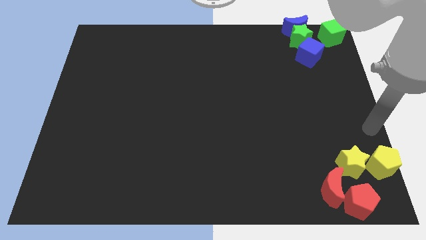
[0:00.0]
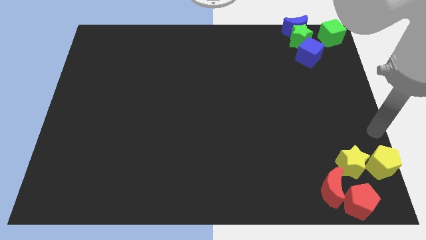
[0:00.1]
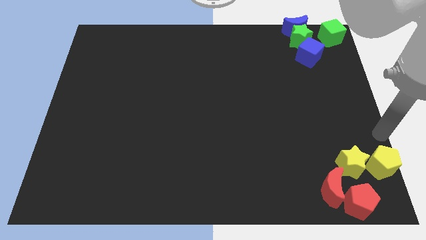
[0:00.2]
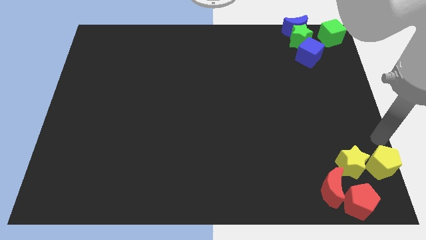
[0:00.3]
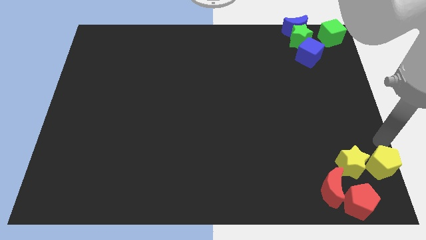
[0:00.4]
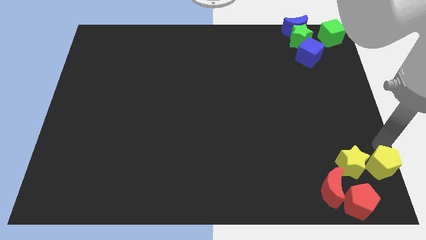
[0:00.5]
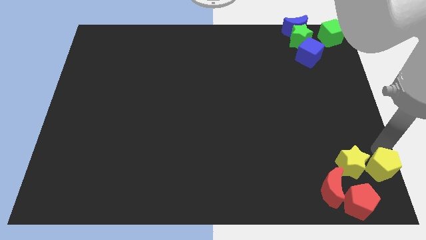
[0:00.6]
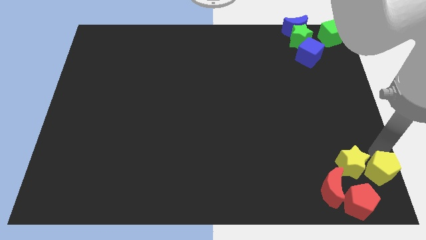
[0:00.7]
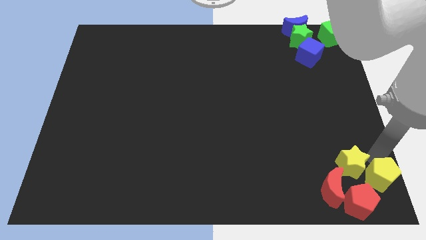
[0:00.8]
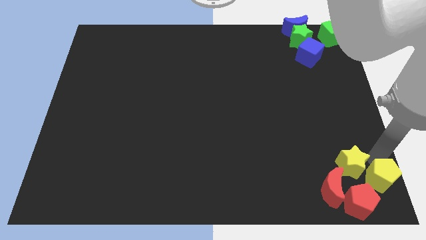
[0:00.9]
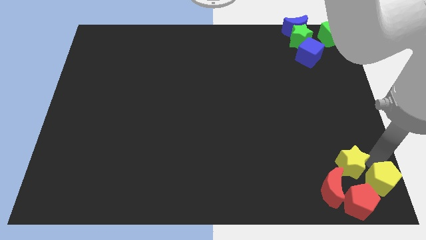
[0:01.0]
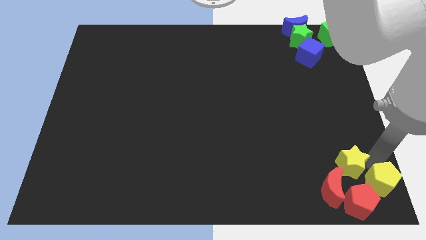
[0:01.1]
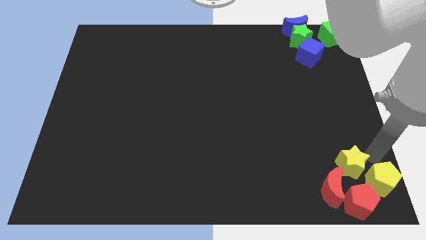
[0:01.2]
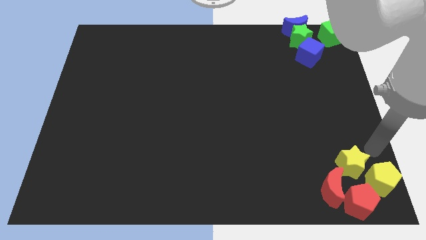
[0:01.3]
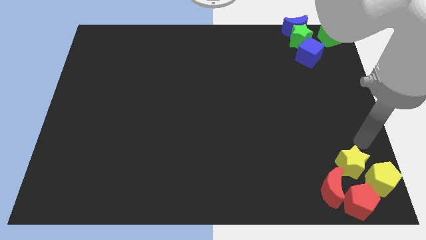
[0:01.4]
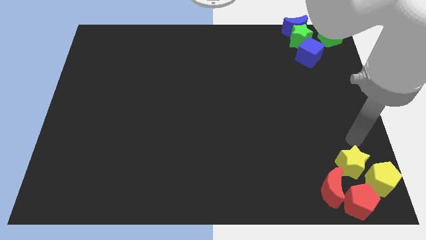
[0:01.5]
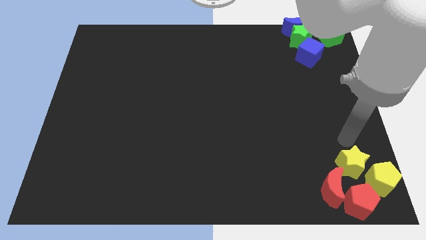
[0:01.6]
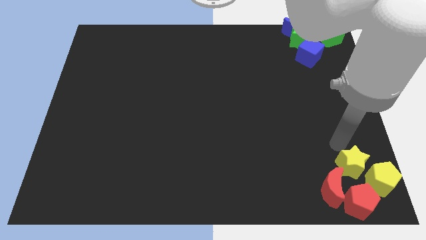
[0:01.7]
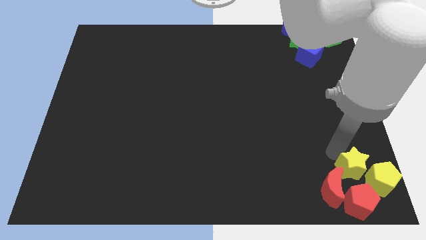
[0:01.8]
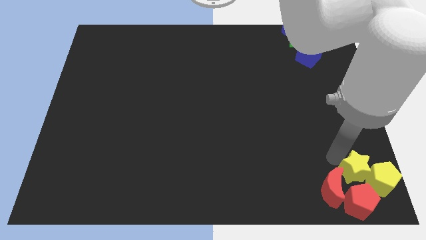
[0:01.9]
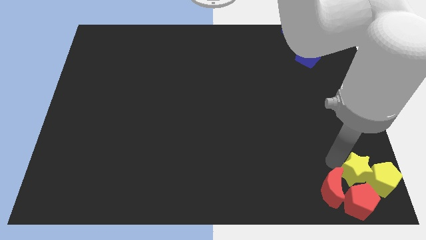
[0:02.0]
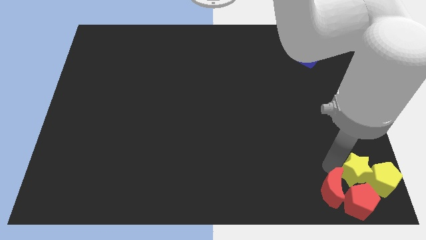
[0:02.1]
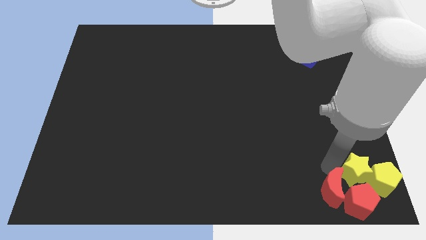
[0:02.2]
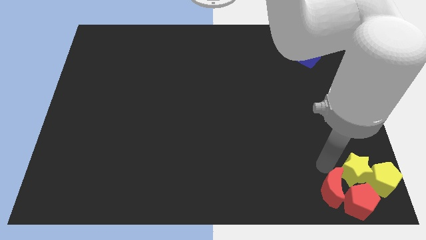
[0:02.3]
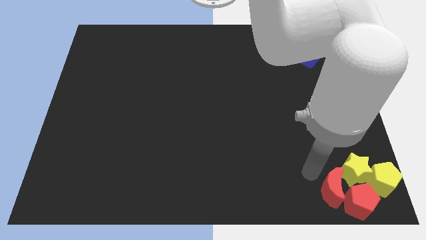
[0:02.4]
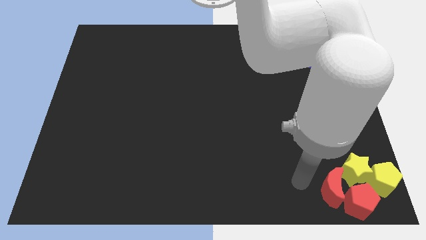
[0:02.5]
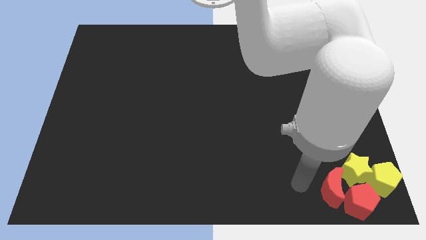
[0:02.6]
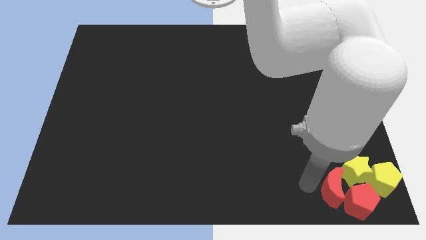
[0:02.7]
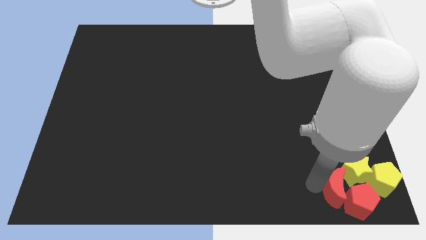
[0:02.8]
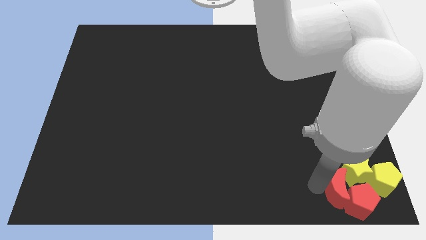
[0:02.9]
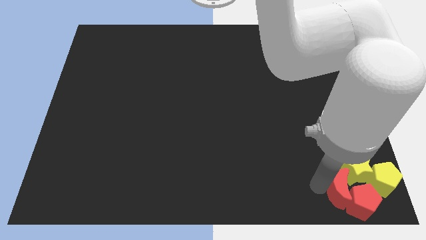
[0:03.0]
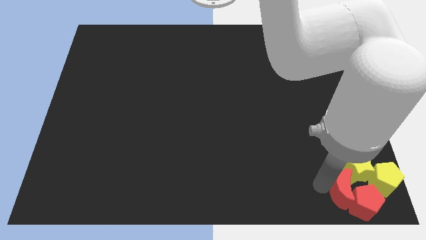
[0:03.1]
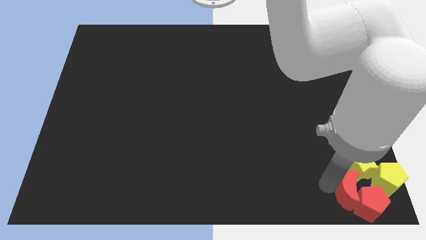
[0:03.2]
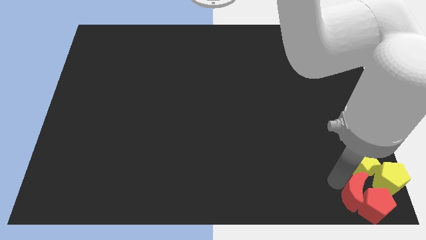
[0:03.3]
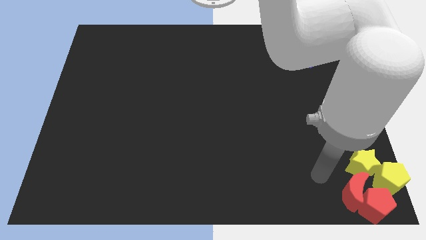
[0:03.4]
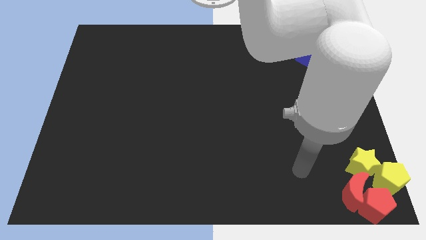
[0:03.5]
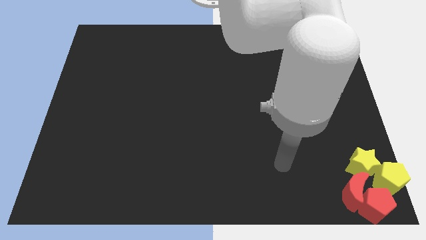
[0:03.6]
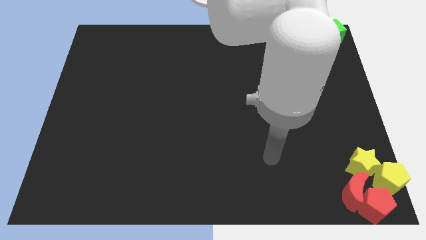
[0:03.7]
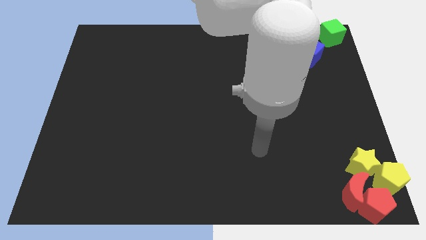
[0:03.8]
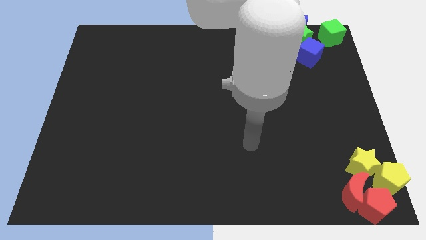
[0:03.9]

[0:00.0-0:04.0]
move the yellow and red blocks to the bottom right corner of the board

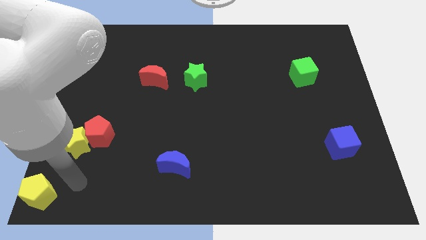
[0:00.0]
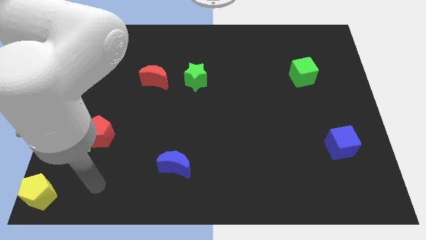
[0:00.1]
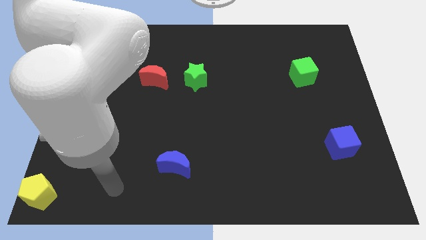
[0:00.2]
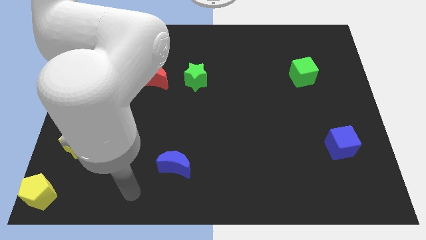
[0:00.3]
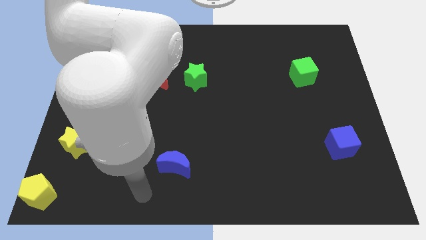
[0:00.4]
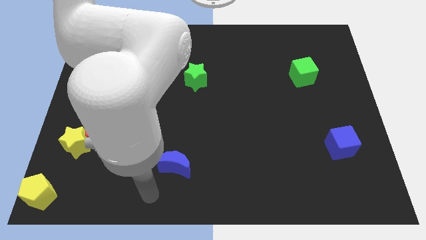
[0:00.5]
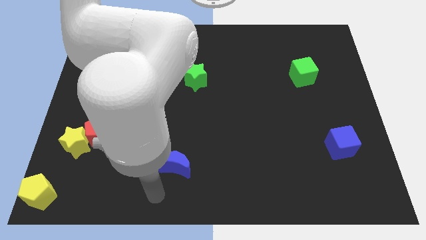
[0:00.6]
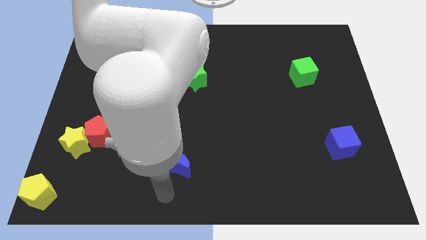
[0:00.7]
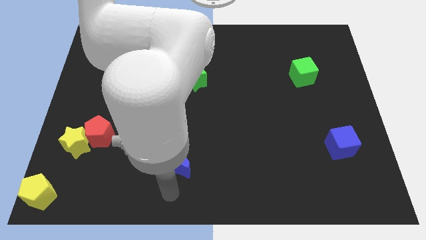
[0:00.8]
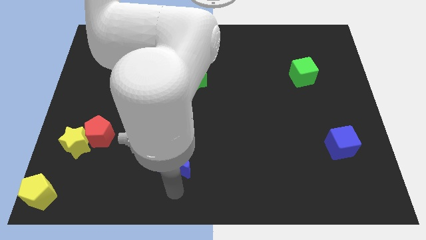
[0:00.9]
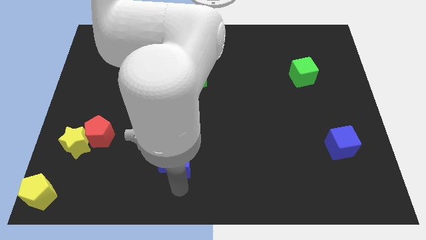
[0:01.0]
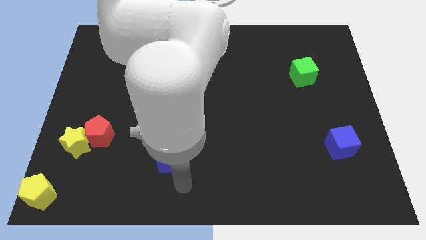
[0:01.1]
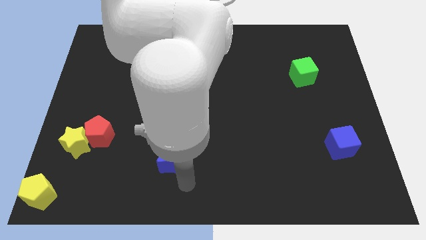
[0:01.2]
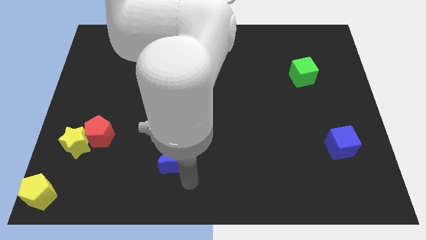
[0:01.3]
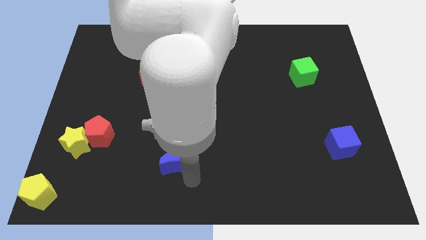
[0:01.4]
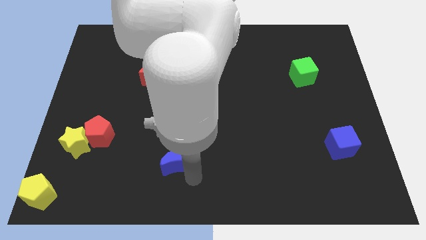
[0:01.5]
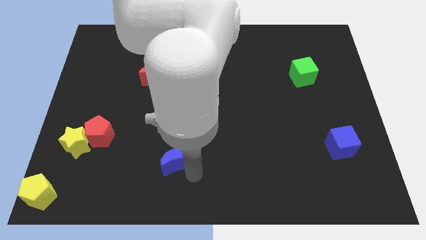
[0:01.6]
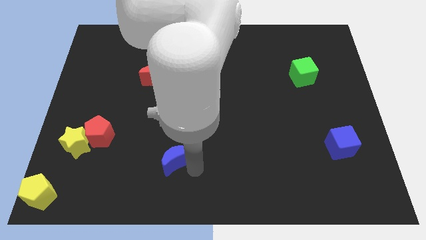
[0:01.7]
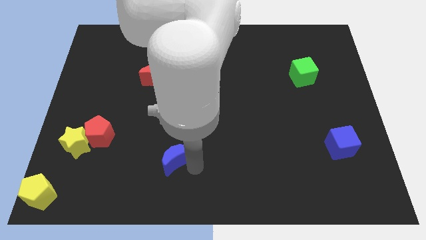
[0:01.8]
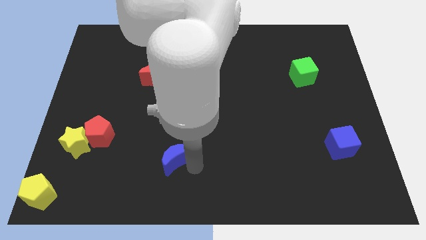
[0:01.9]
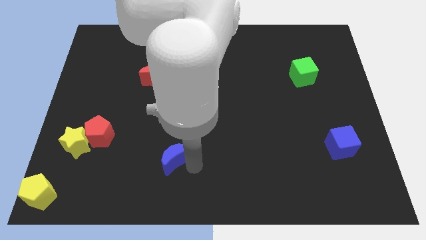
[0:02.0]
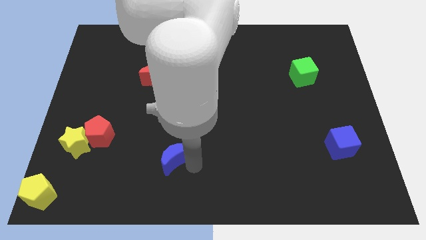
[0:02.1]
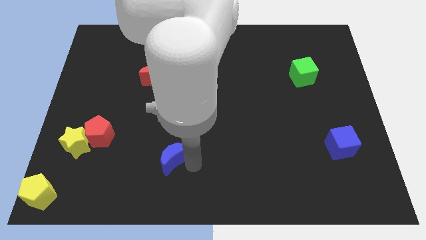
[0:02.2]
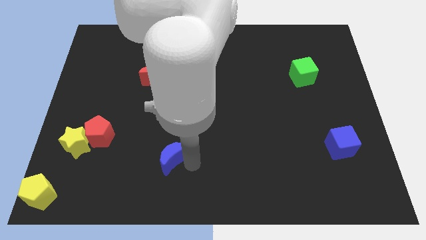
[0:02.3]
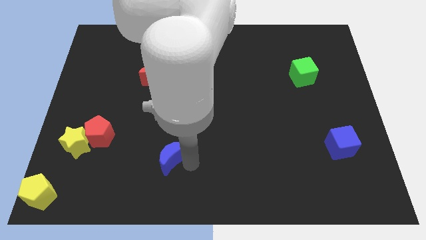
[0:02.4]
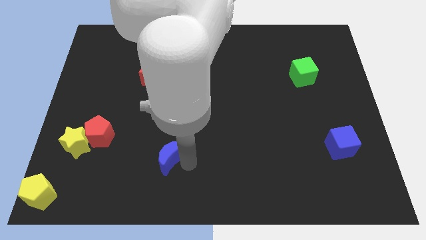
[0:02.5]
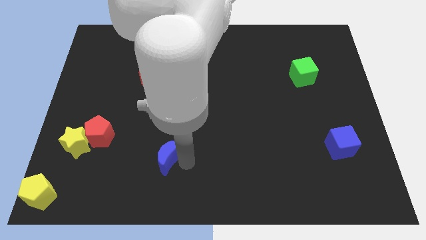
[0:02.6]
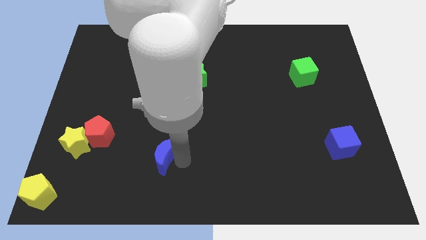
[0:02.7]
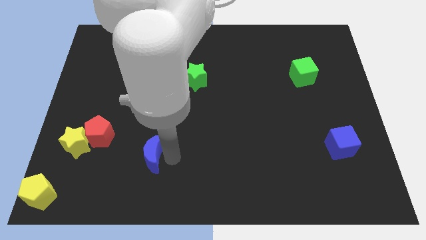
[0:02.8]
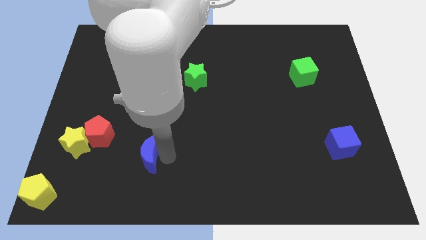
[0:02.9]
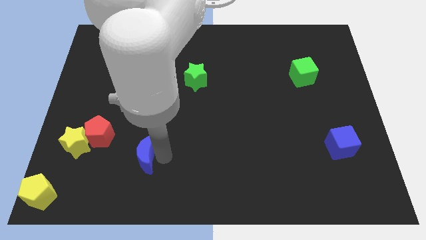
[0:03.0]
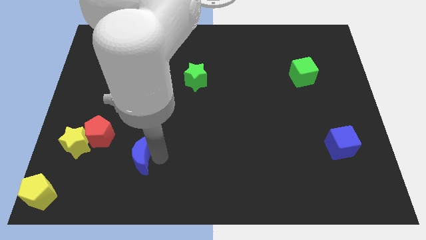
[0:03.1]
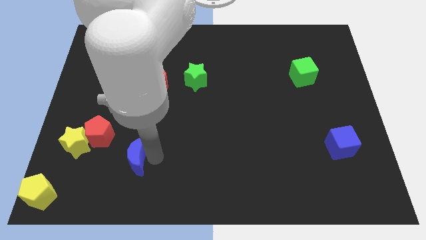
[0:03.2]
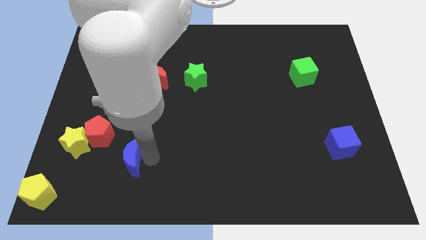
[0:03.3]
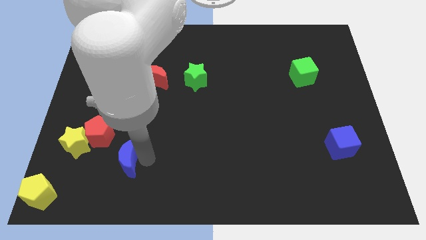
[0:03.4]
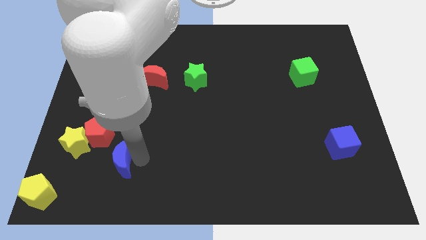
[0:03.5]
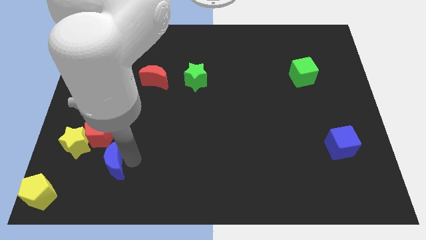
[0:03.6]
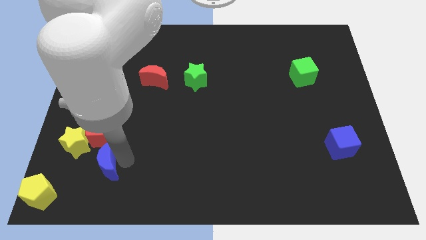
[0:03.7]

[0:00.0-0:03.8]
push the blue crescent to the bottom right of the red pentagon

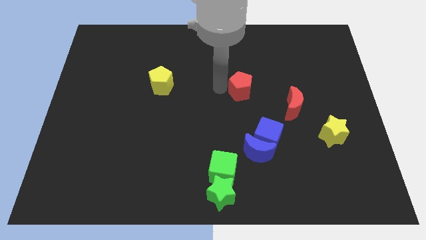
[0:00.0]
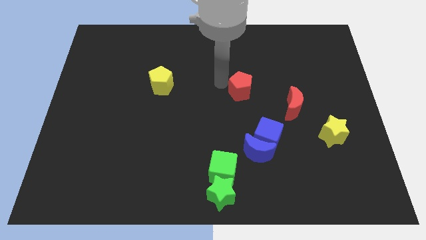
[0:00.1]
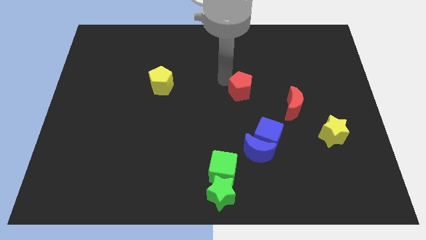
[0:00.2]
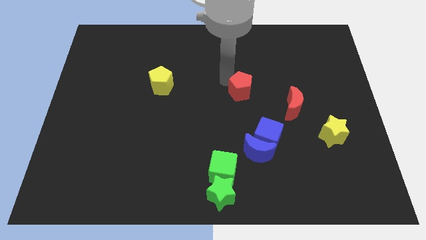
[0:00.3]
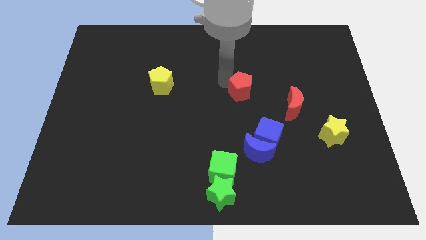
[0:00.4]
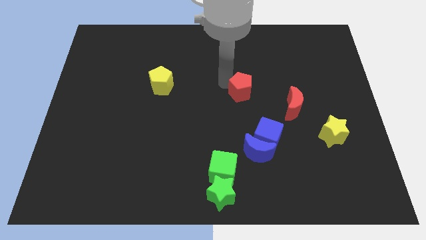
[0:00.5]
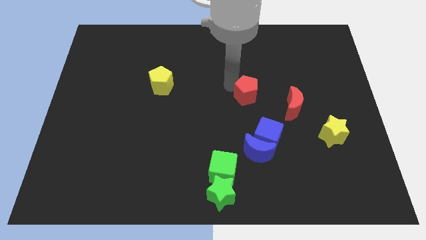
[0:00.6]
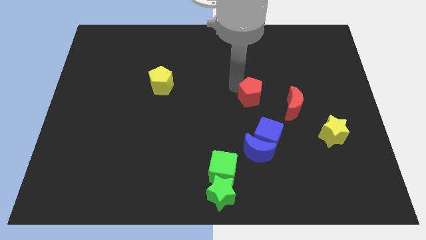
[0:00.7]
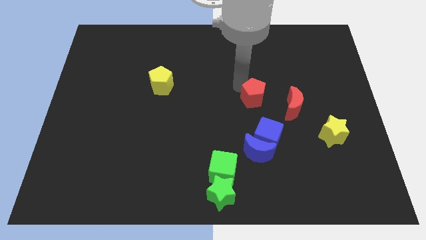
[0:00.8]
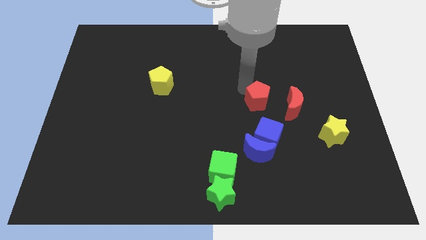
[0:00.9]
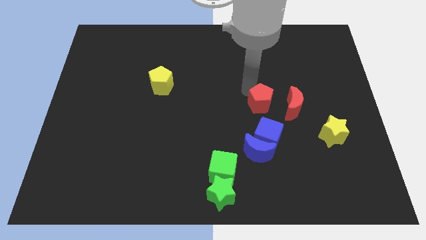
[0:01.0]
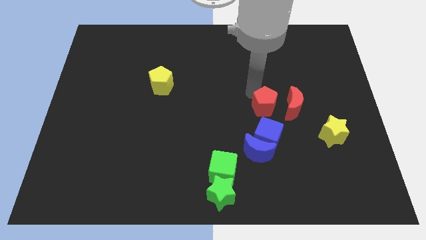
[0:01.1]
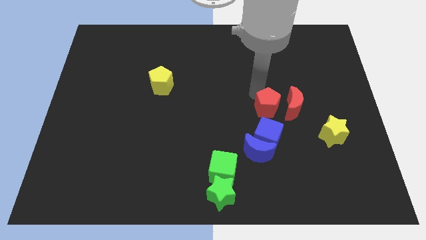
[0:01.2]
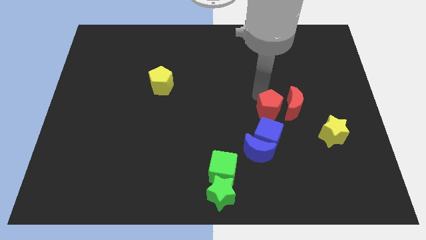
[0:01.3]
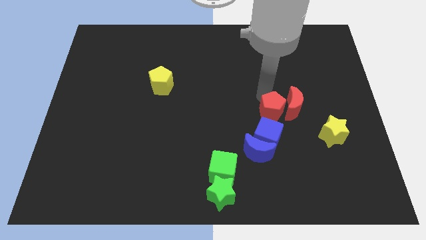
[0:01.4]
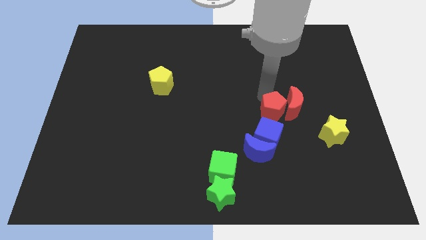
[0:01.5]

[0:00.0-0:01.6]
move the red pentagon close to the red crescent
